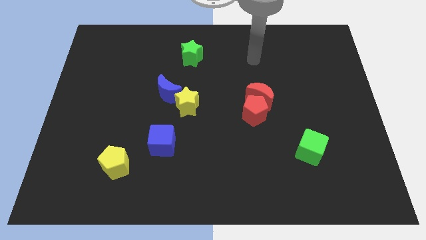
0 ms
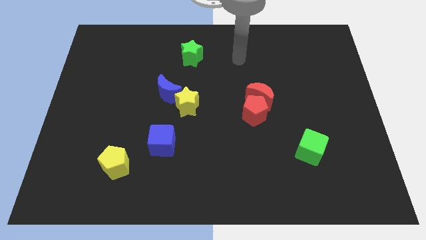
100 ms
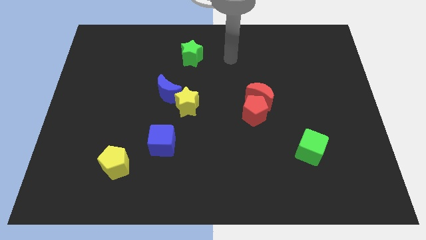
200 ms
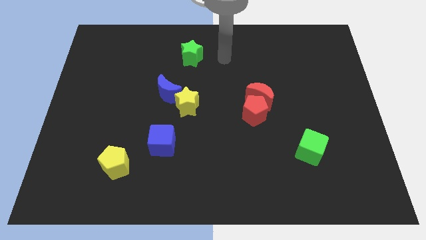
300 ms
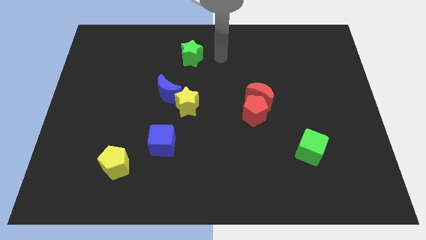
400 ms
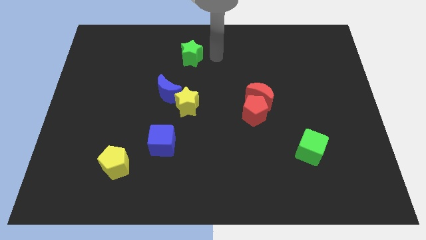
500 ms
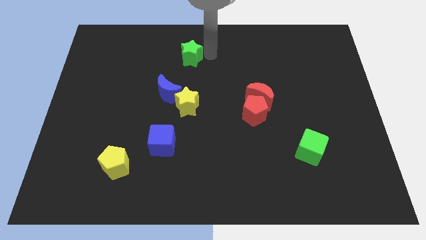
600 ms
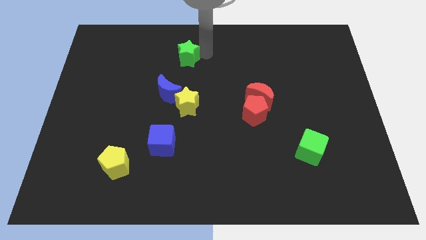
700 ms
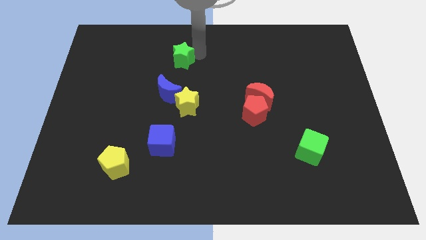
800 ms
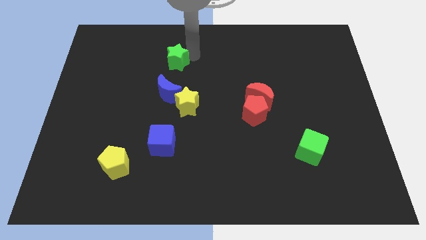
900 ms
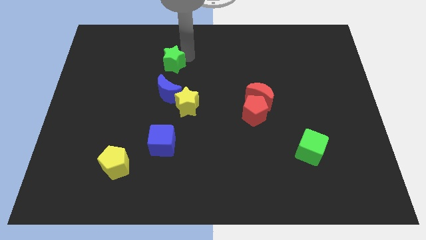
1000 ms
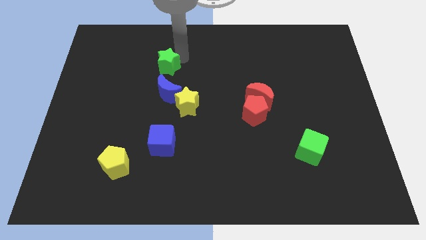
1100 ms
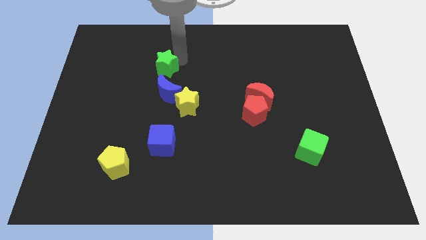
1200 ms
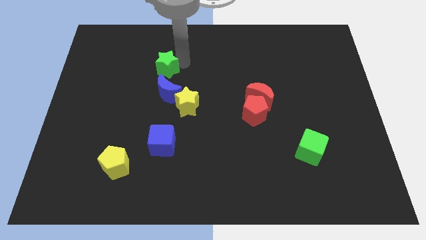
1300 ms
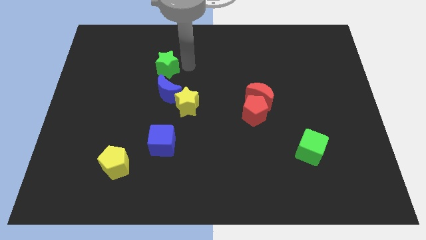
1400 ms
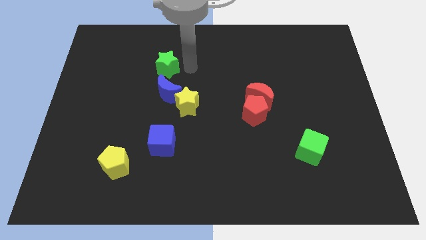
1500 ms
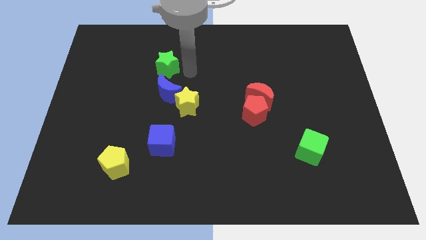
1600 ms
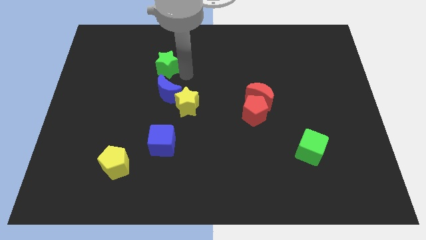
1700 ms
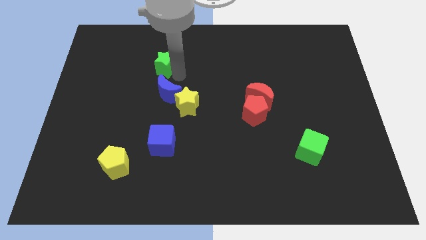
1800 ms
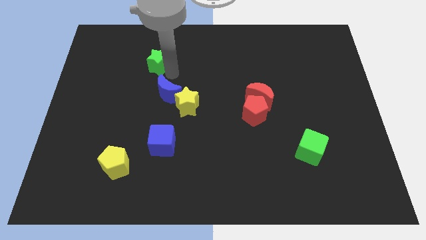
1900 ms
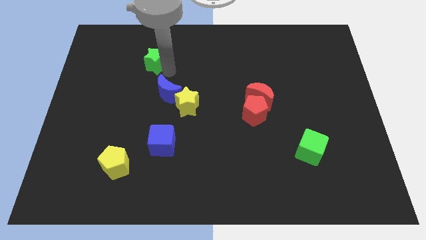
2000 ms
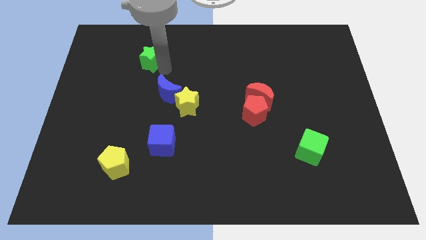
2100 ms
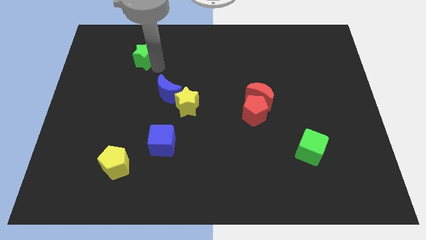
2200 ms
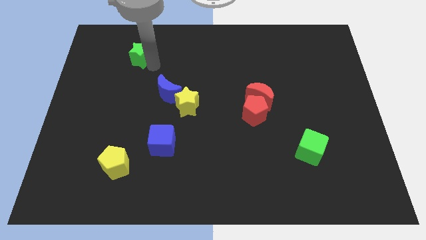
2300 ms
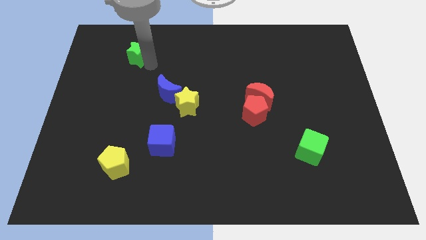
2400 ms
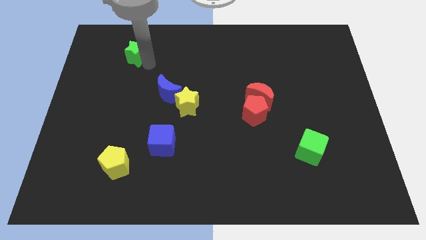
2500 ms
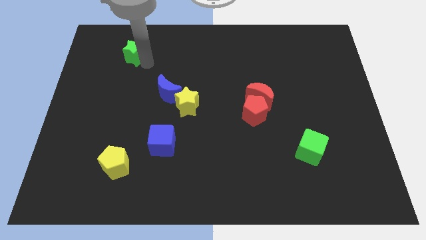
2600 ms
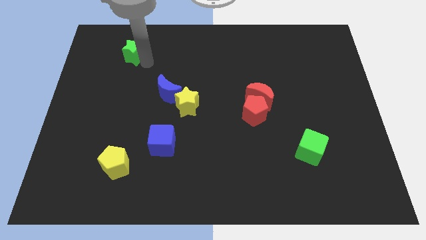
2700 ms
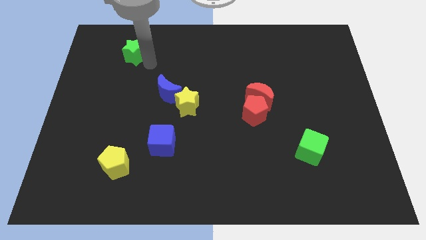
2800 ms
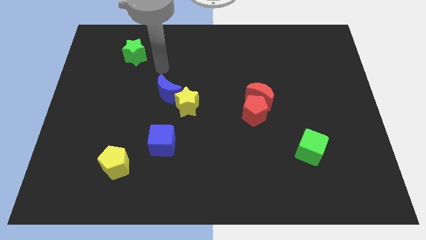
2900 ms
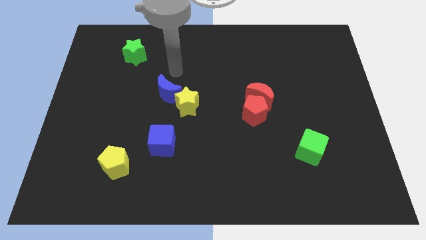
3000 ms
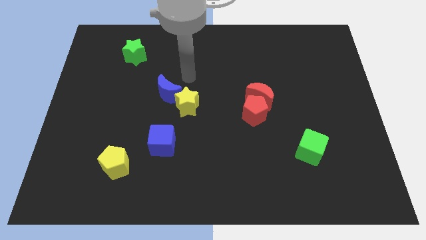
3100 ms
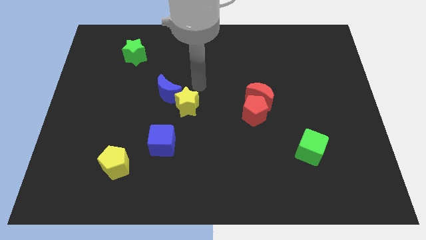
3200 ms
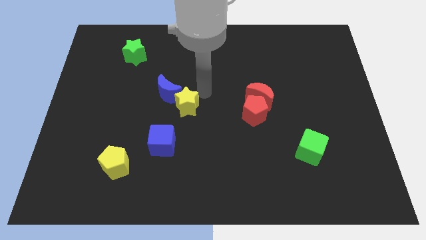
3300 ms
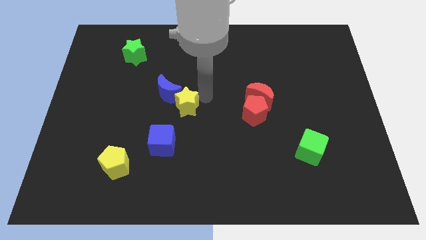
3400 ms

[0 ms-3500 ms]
place the green star above the blue moon

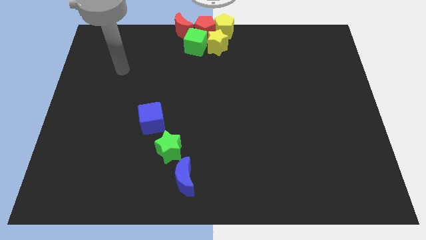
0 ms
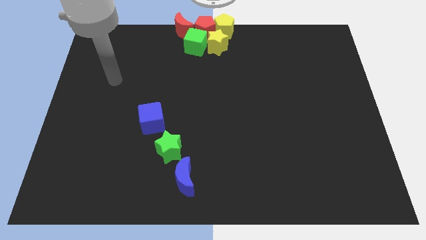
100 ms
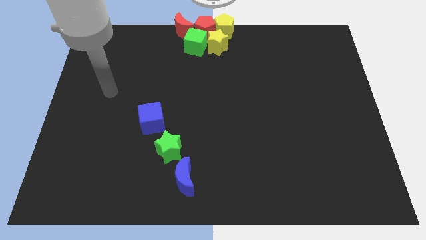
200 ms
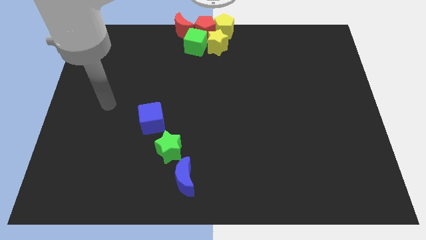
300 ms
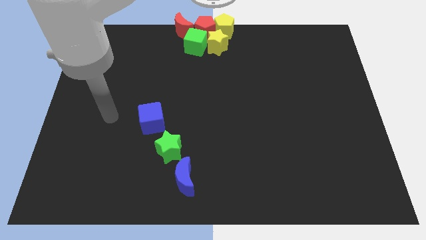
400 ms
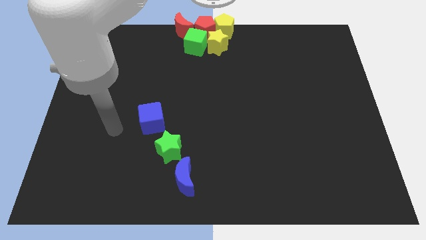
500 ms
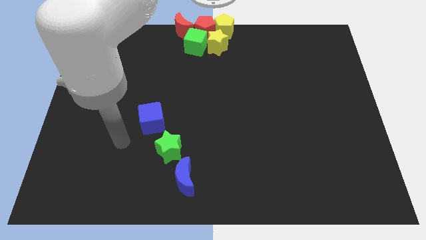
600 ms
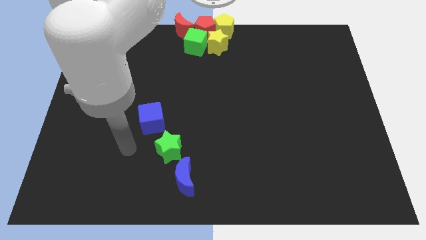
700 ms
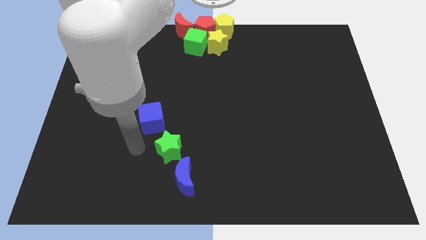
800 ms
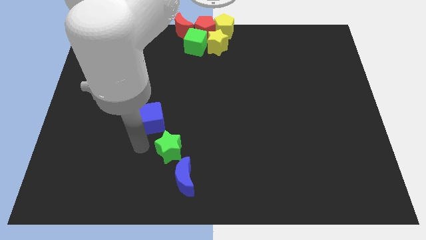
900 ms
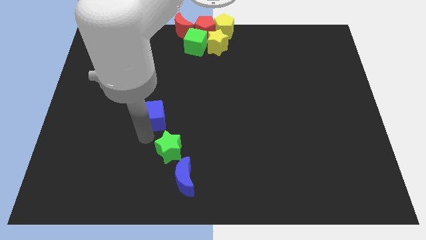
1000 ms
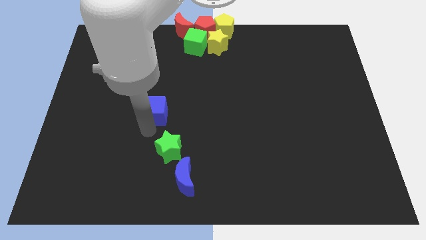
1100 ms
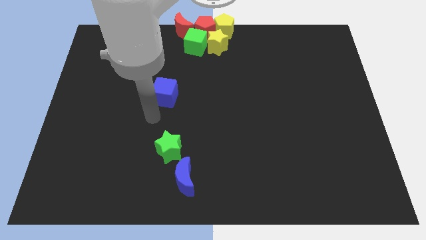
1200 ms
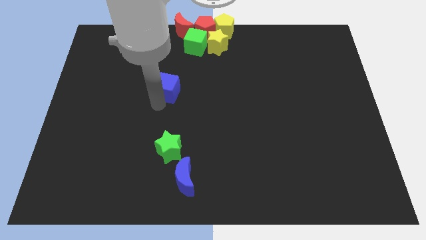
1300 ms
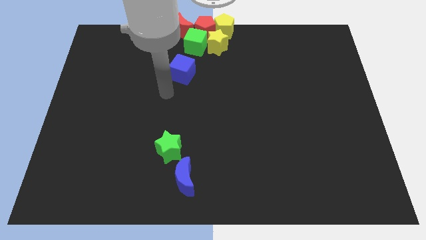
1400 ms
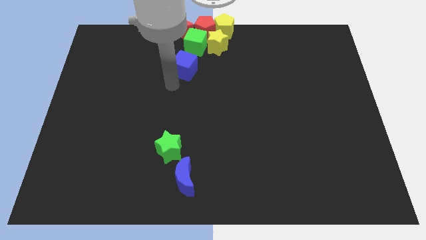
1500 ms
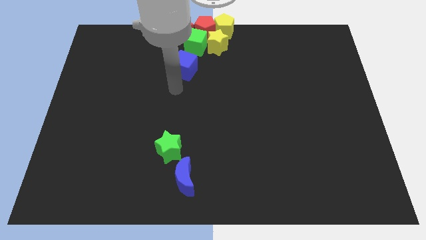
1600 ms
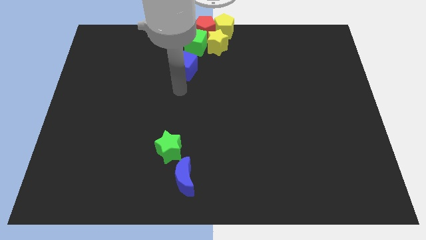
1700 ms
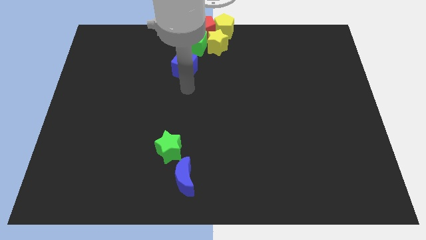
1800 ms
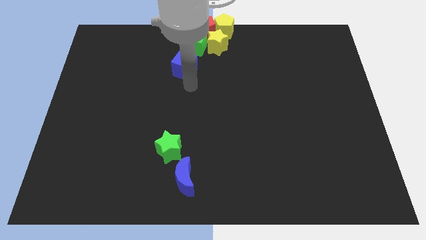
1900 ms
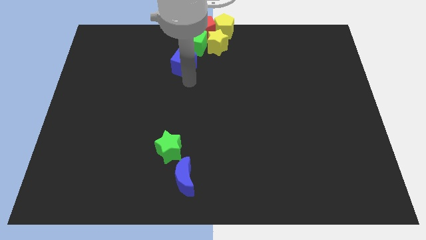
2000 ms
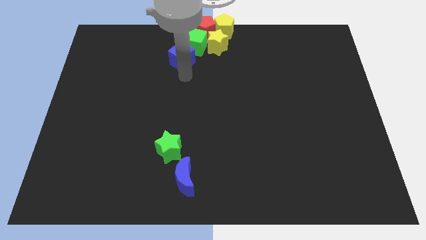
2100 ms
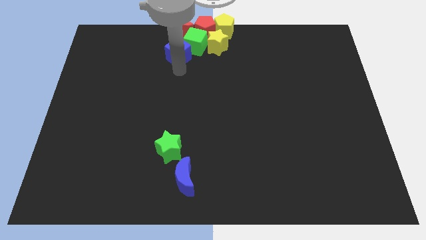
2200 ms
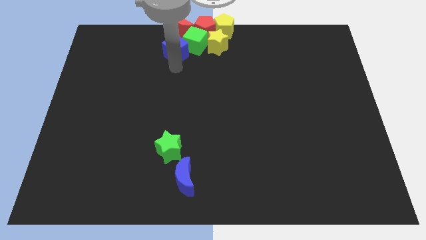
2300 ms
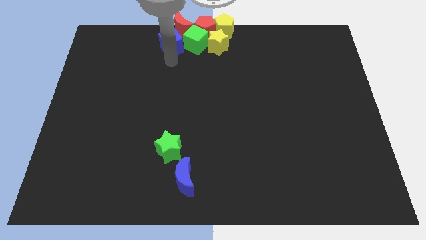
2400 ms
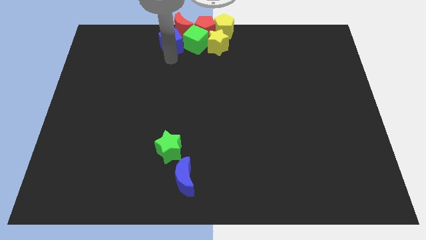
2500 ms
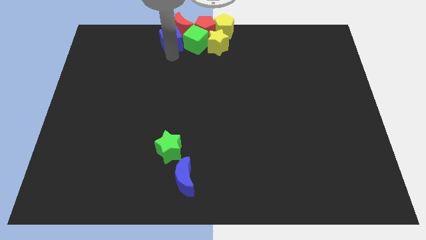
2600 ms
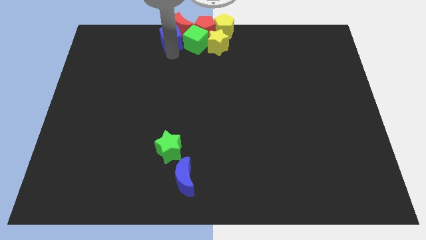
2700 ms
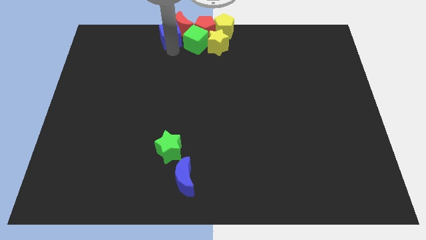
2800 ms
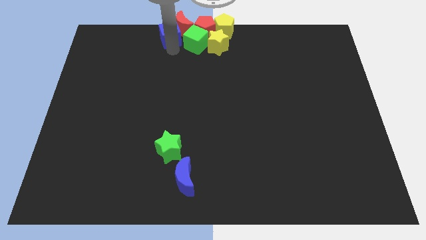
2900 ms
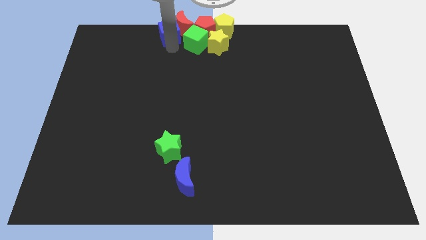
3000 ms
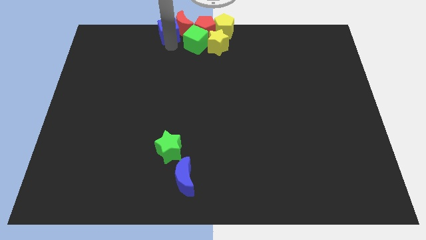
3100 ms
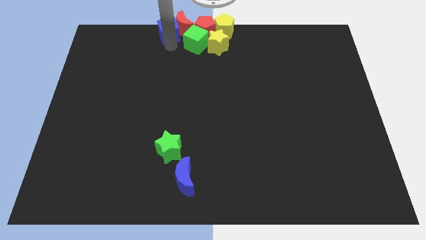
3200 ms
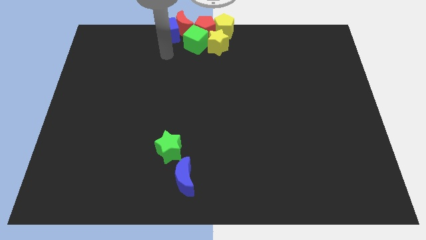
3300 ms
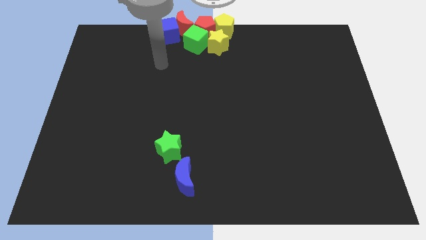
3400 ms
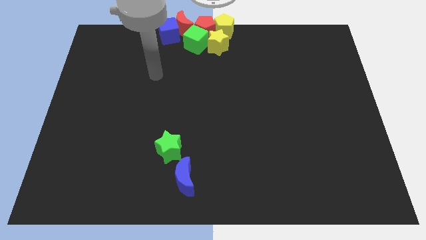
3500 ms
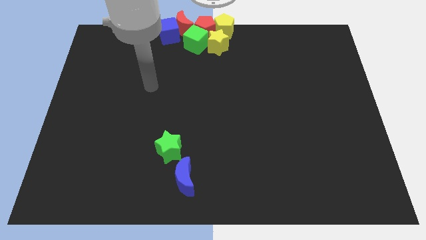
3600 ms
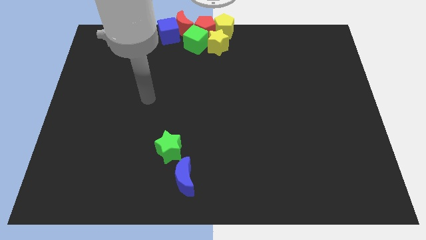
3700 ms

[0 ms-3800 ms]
push blue cube in to red moon

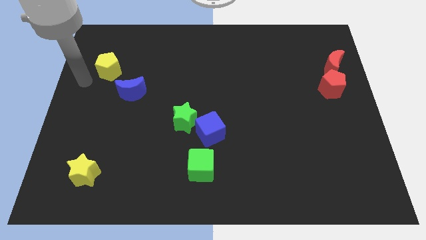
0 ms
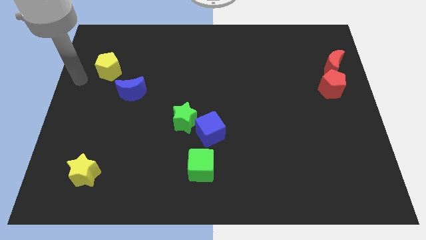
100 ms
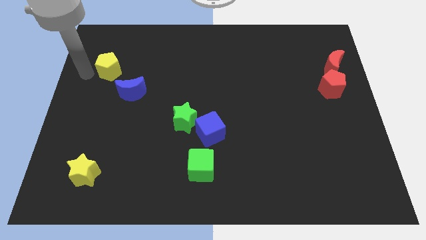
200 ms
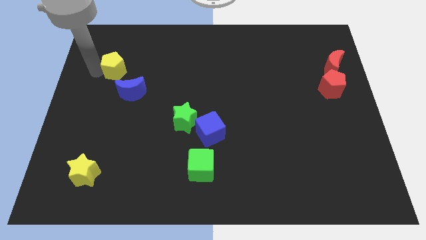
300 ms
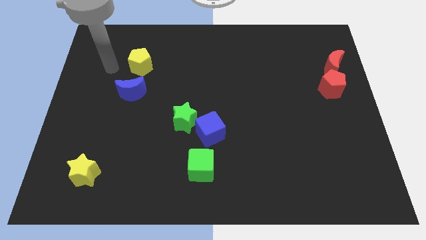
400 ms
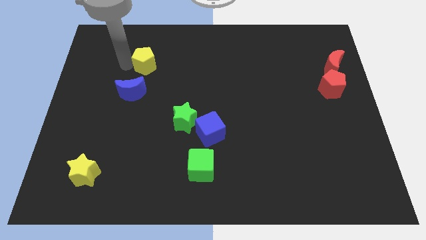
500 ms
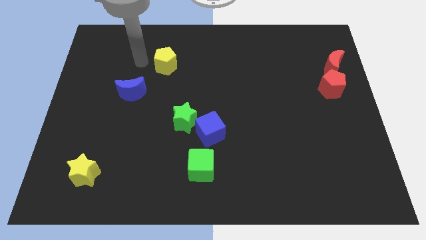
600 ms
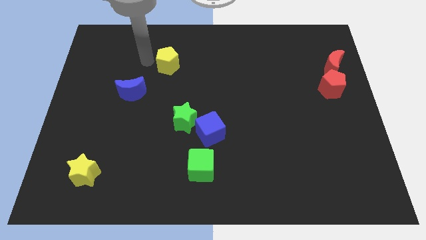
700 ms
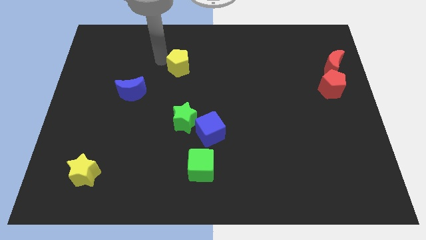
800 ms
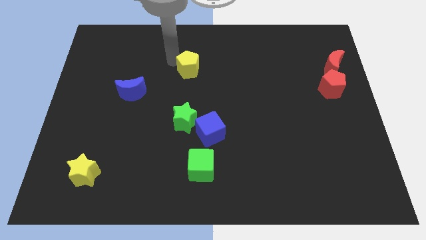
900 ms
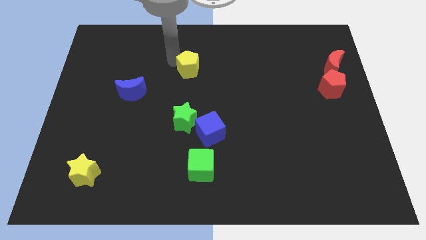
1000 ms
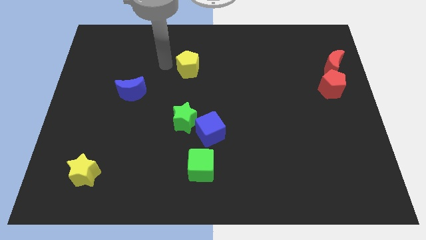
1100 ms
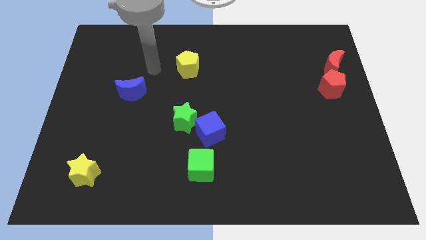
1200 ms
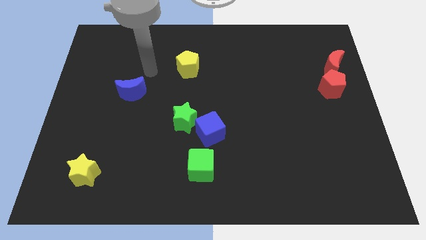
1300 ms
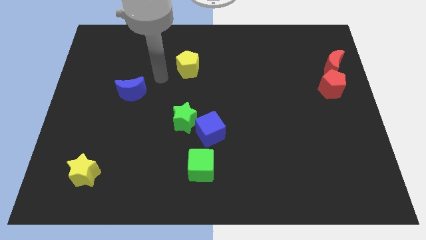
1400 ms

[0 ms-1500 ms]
put yellow pentagon vertically above the green star

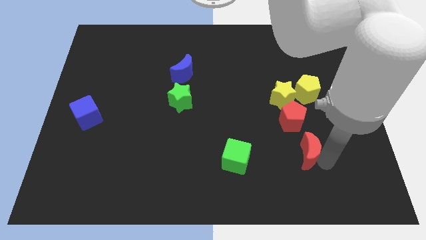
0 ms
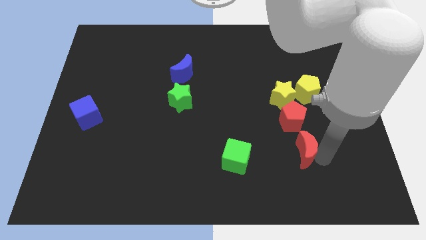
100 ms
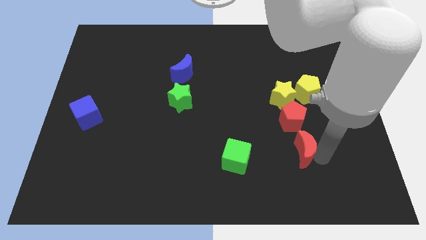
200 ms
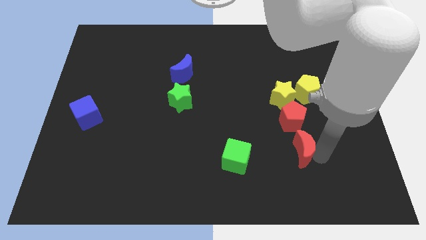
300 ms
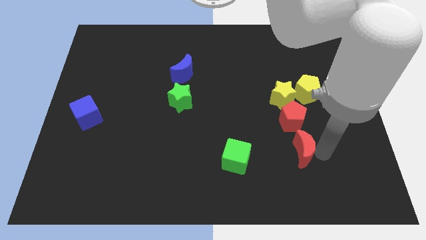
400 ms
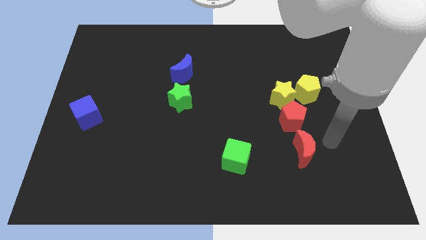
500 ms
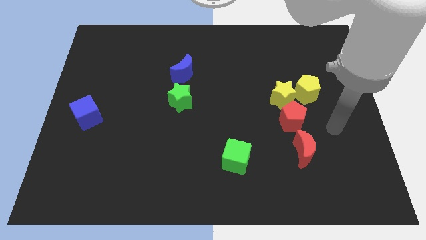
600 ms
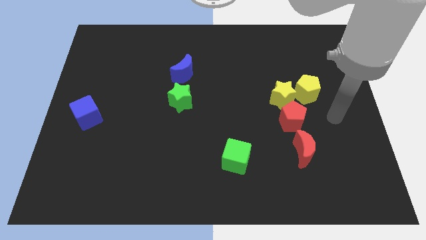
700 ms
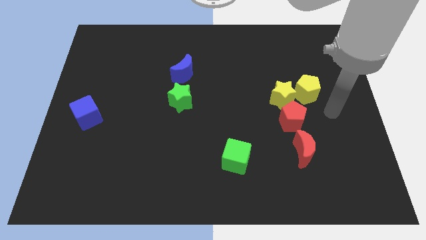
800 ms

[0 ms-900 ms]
touch the red moon
